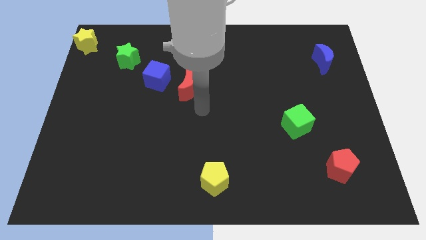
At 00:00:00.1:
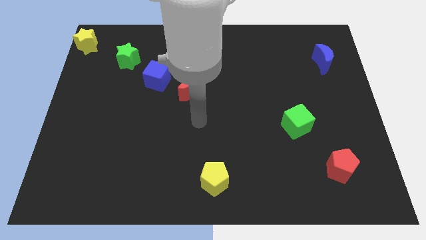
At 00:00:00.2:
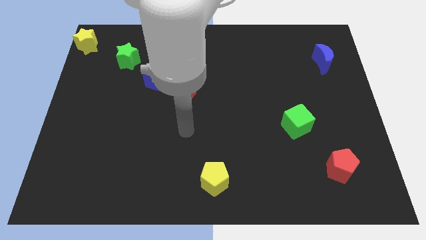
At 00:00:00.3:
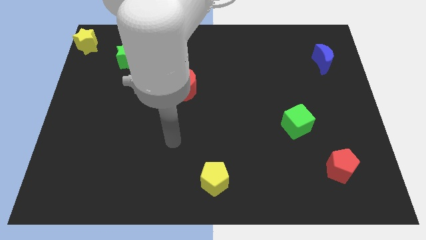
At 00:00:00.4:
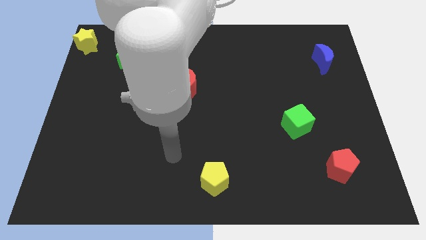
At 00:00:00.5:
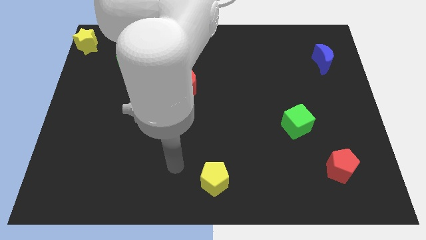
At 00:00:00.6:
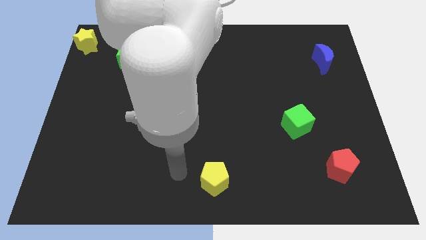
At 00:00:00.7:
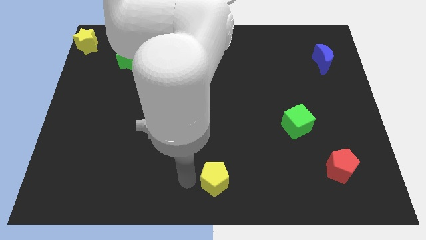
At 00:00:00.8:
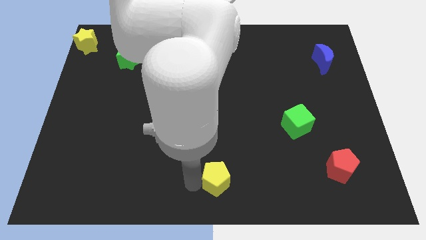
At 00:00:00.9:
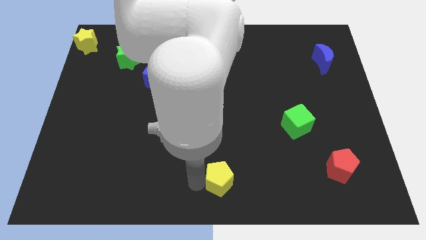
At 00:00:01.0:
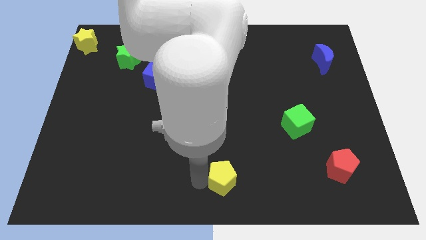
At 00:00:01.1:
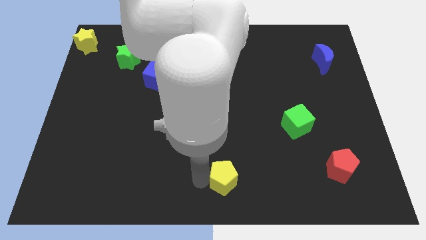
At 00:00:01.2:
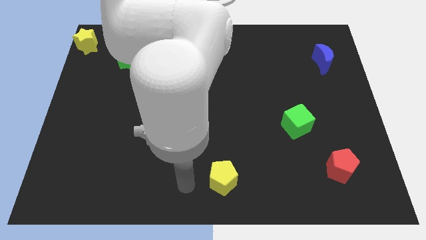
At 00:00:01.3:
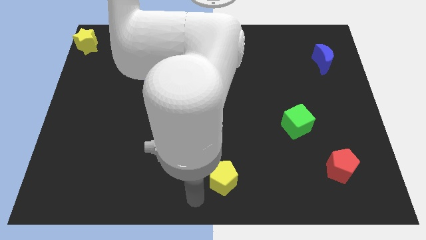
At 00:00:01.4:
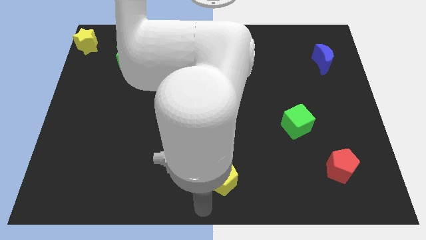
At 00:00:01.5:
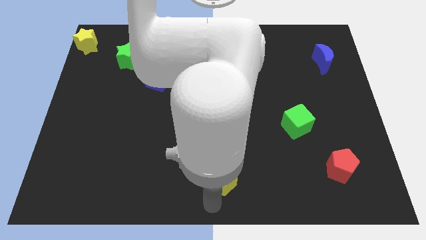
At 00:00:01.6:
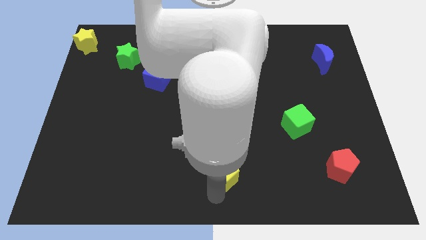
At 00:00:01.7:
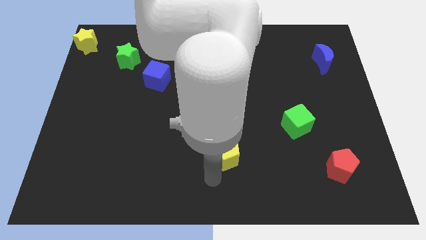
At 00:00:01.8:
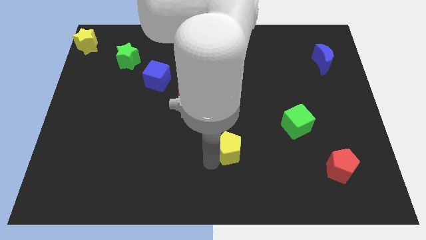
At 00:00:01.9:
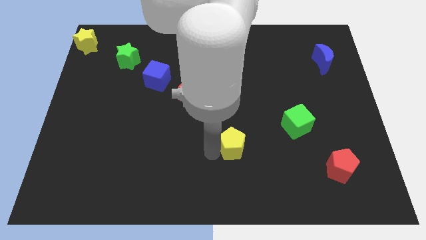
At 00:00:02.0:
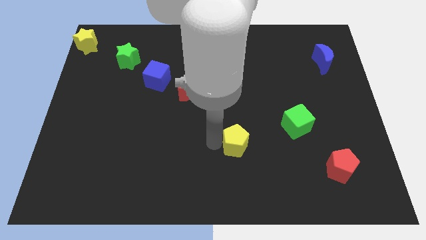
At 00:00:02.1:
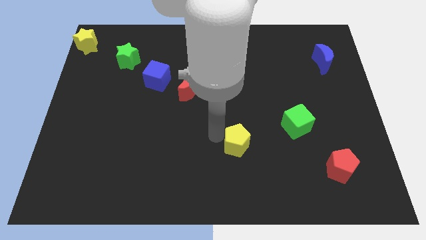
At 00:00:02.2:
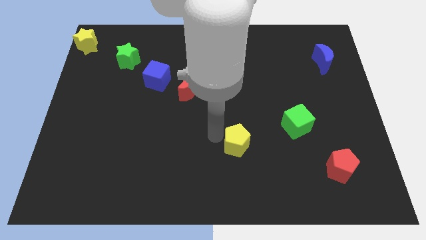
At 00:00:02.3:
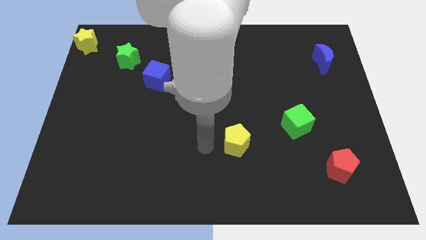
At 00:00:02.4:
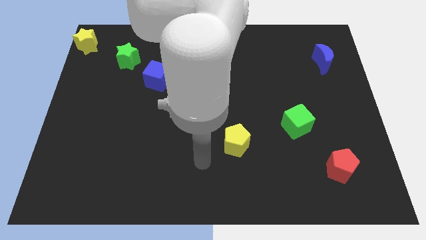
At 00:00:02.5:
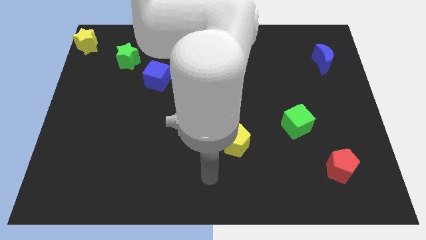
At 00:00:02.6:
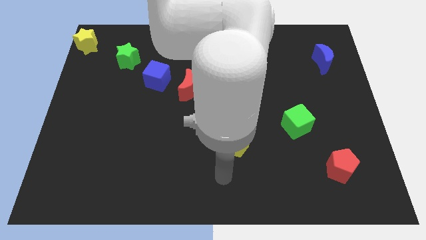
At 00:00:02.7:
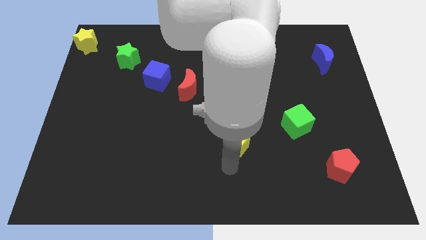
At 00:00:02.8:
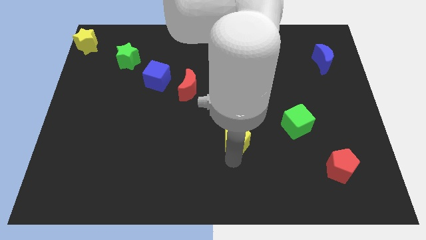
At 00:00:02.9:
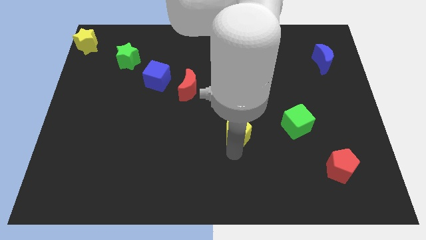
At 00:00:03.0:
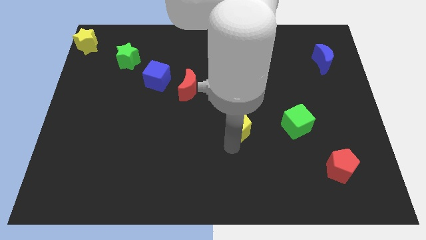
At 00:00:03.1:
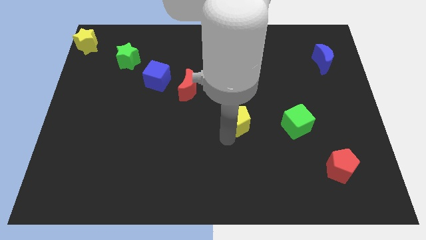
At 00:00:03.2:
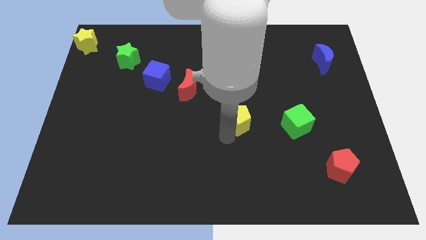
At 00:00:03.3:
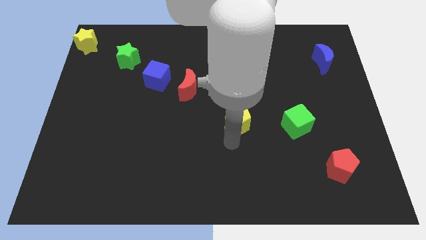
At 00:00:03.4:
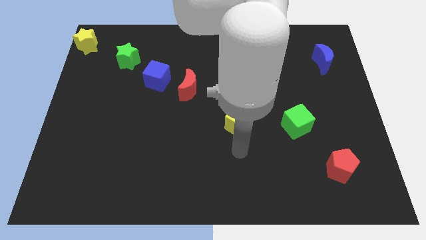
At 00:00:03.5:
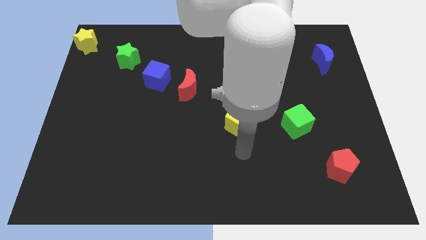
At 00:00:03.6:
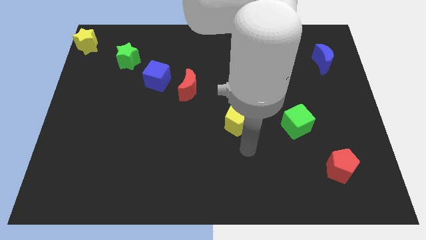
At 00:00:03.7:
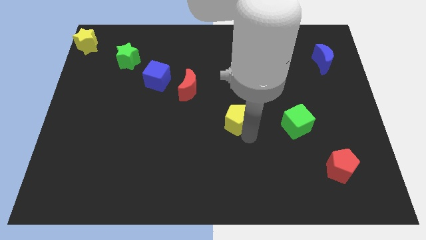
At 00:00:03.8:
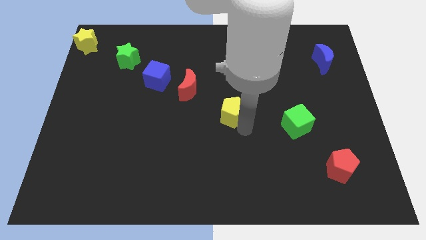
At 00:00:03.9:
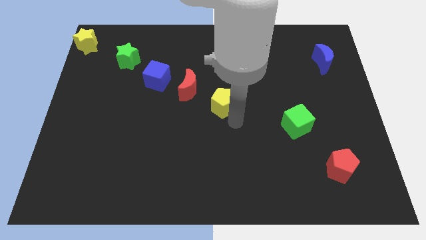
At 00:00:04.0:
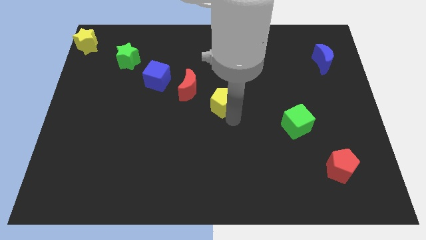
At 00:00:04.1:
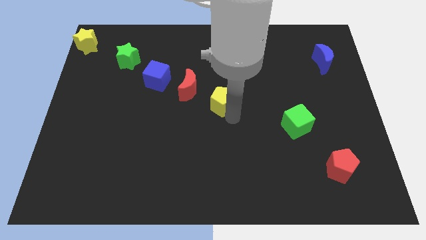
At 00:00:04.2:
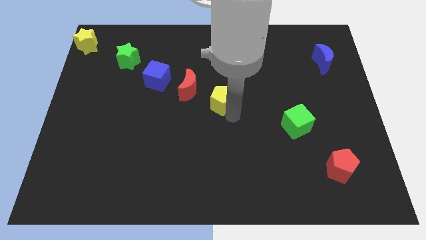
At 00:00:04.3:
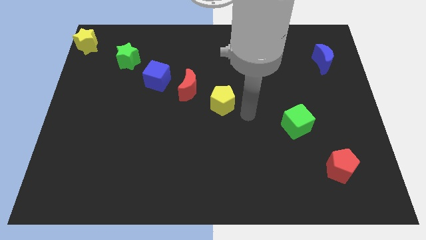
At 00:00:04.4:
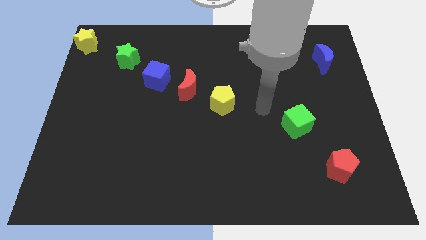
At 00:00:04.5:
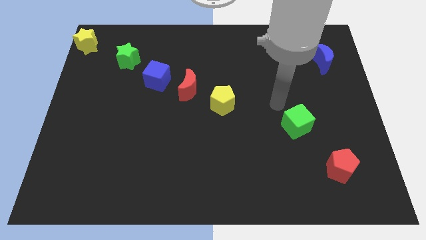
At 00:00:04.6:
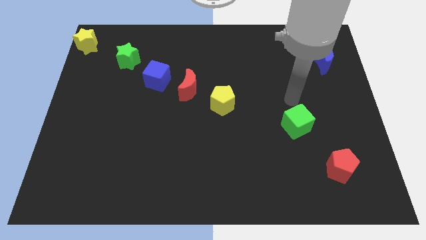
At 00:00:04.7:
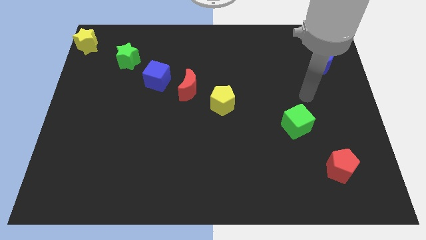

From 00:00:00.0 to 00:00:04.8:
slide the yellow pentagon to the center of the board

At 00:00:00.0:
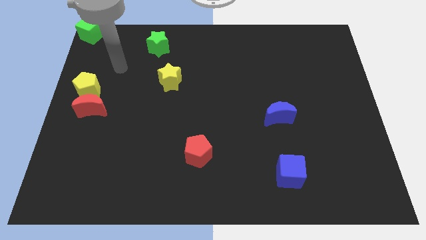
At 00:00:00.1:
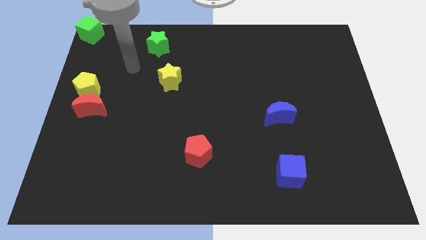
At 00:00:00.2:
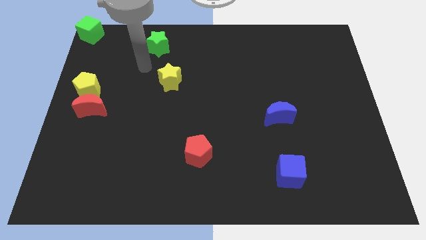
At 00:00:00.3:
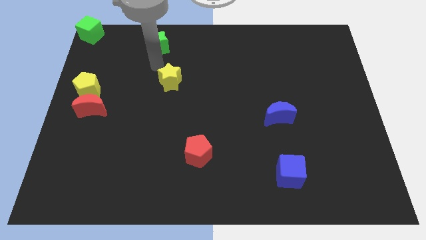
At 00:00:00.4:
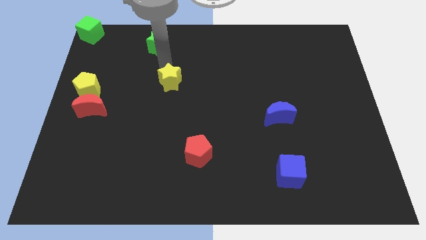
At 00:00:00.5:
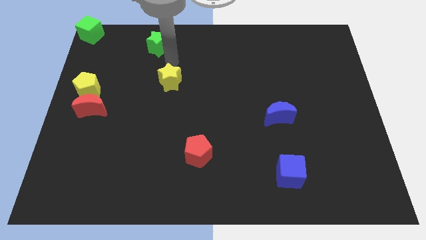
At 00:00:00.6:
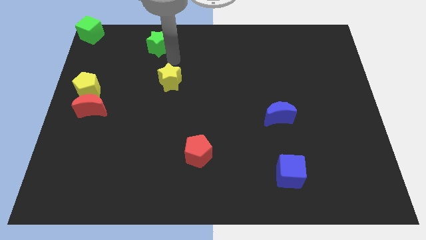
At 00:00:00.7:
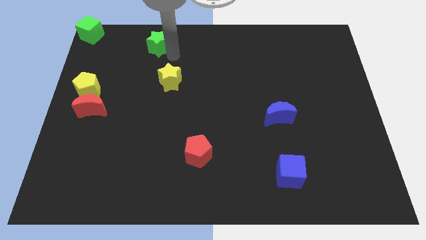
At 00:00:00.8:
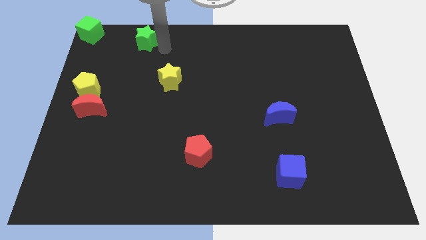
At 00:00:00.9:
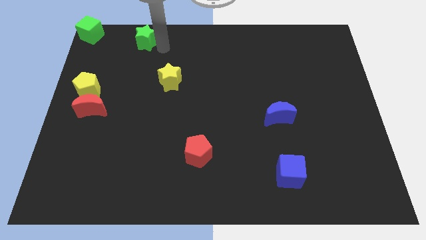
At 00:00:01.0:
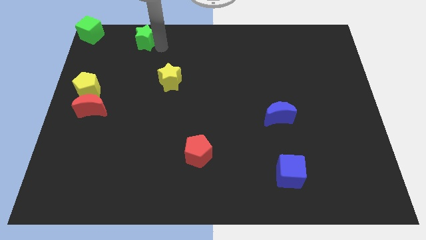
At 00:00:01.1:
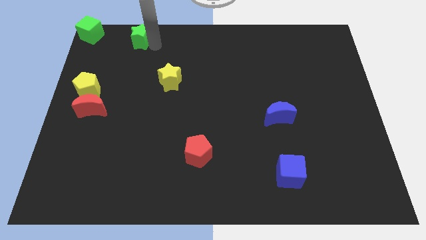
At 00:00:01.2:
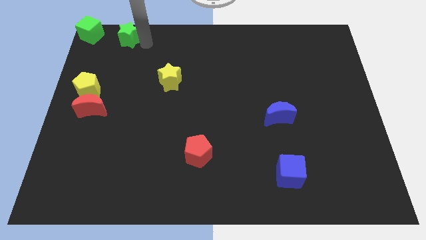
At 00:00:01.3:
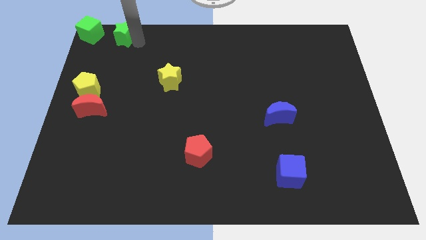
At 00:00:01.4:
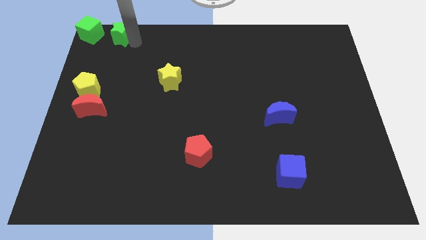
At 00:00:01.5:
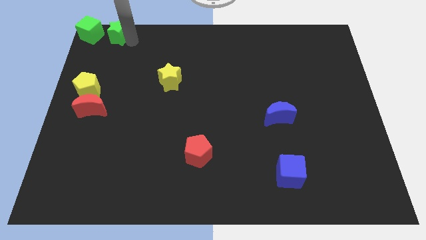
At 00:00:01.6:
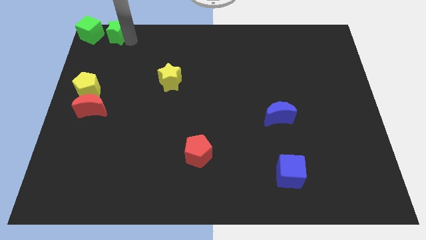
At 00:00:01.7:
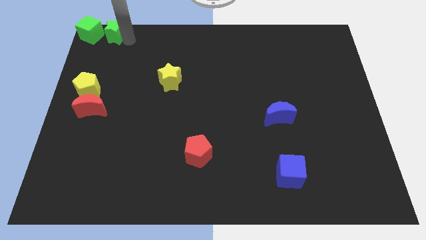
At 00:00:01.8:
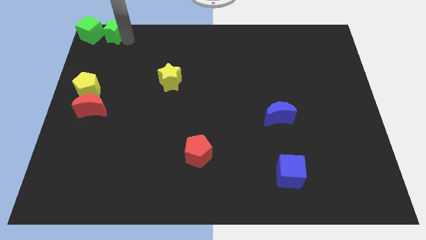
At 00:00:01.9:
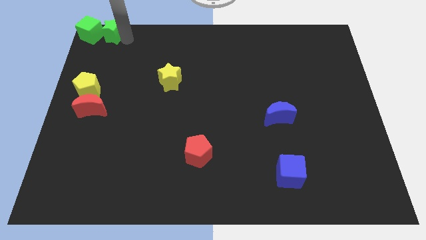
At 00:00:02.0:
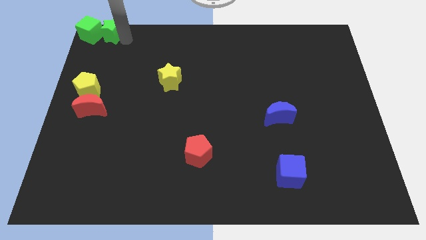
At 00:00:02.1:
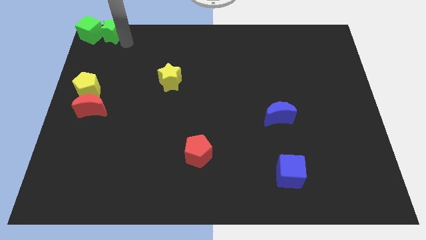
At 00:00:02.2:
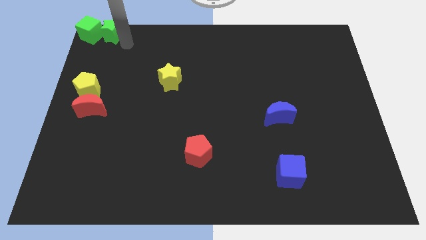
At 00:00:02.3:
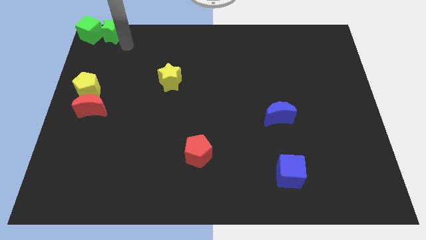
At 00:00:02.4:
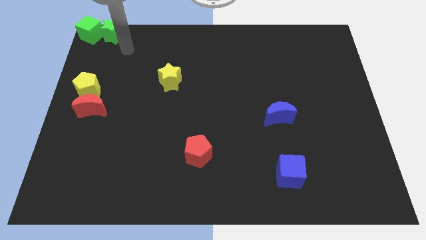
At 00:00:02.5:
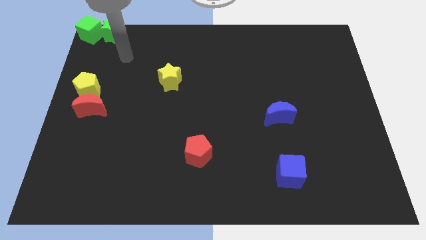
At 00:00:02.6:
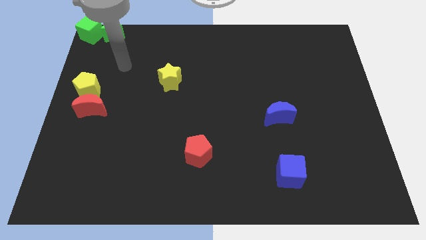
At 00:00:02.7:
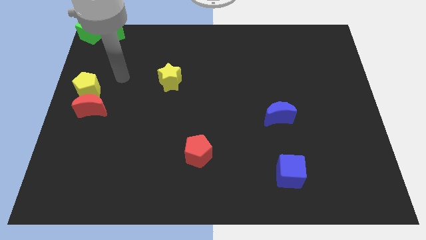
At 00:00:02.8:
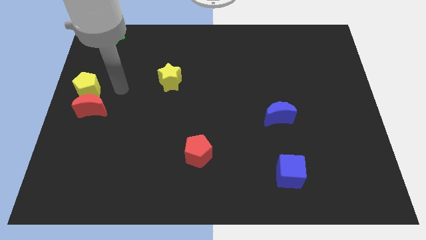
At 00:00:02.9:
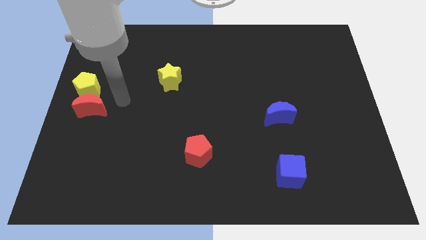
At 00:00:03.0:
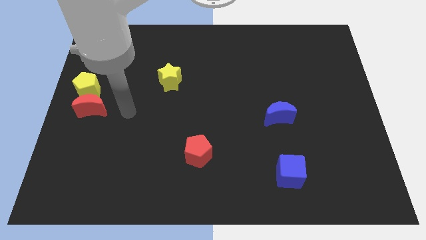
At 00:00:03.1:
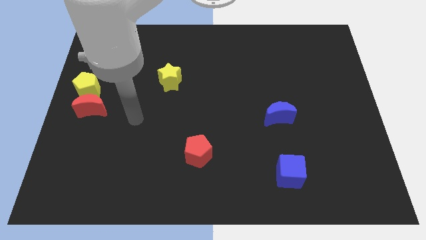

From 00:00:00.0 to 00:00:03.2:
move green star towards green cube

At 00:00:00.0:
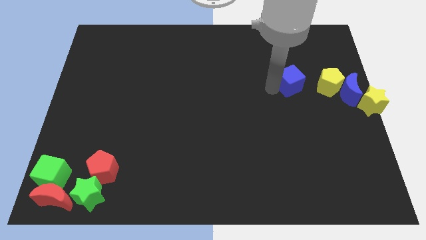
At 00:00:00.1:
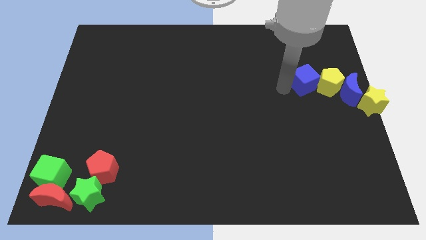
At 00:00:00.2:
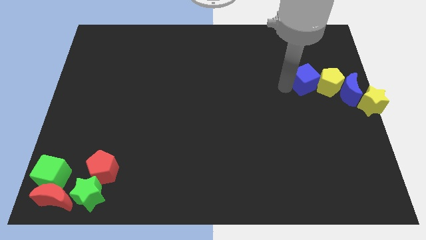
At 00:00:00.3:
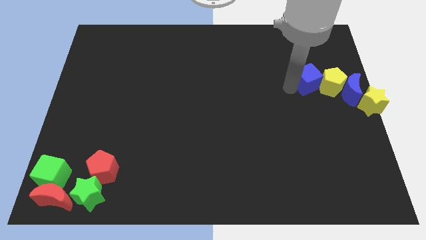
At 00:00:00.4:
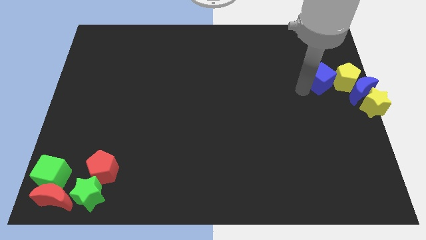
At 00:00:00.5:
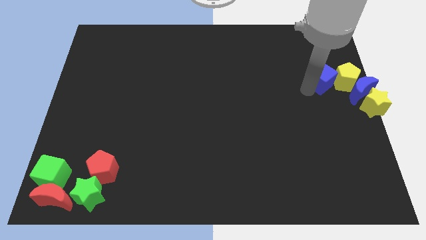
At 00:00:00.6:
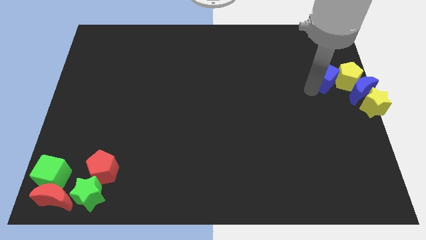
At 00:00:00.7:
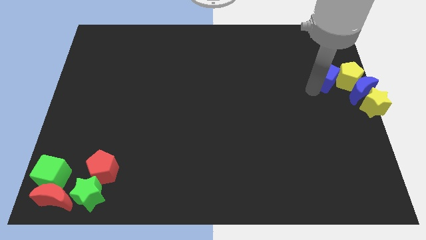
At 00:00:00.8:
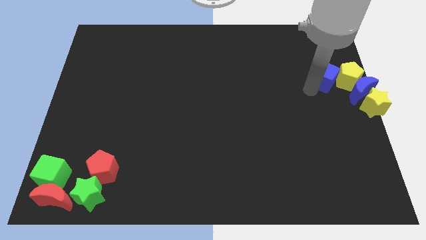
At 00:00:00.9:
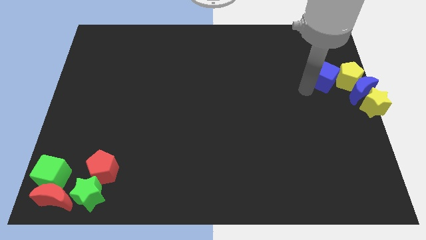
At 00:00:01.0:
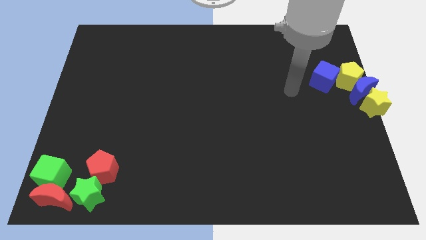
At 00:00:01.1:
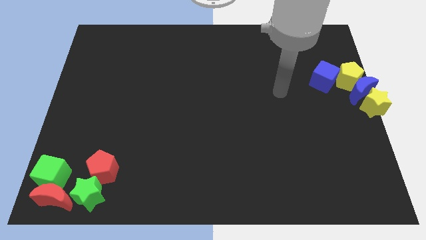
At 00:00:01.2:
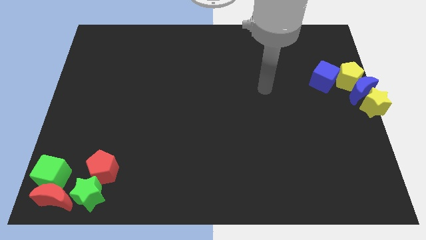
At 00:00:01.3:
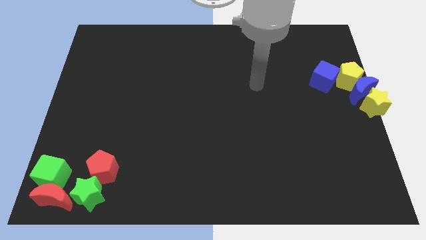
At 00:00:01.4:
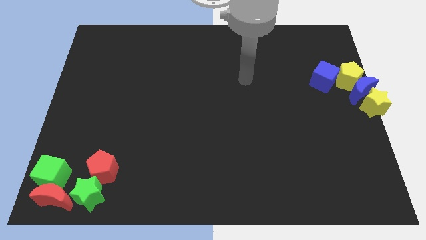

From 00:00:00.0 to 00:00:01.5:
push the blue cube into the yellow pentagon
